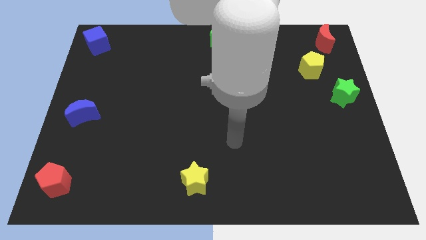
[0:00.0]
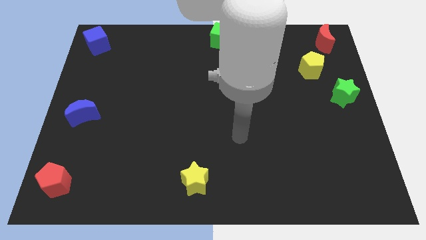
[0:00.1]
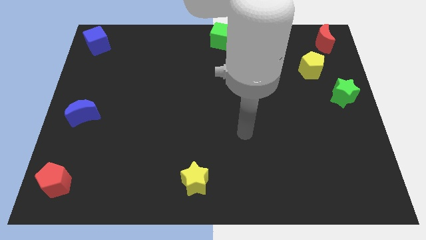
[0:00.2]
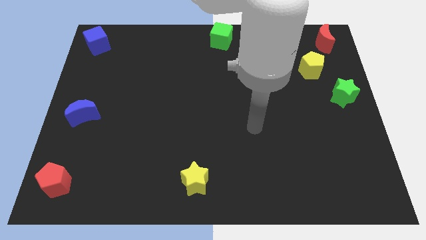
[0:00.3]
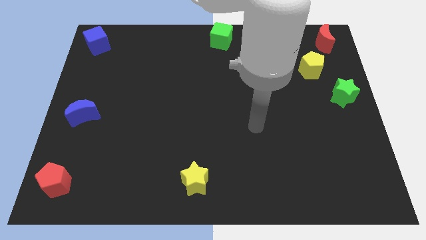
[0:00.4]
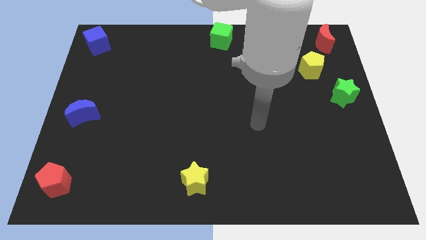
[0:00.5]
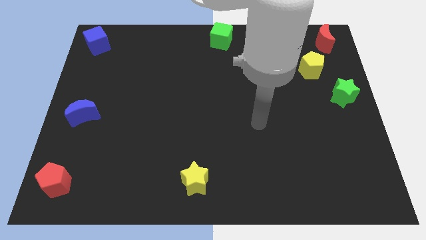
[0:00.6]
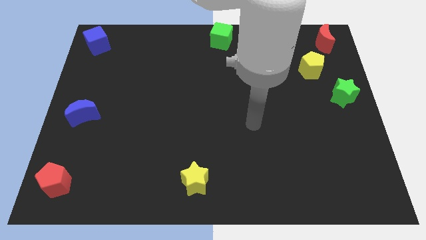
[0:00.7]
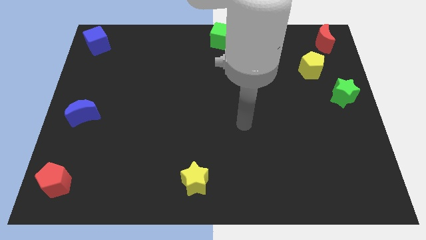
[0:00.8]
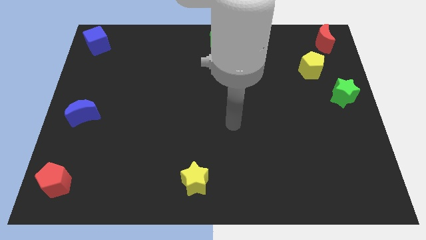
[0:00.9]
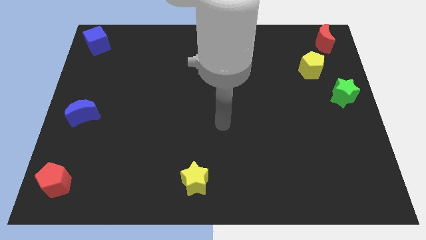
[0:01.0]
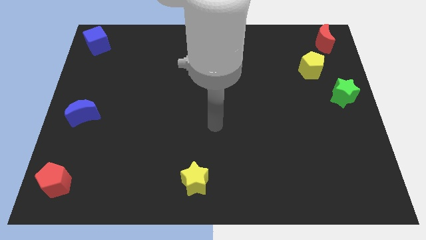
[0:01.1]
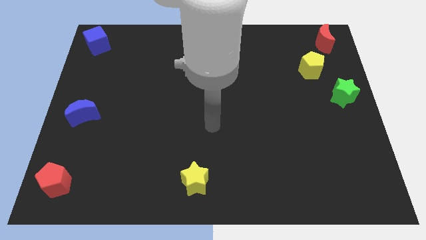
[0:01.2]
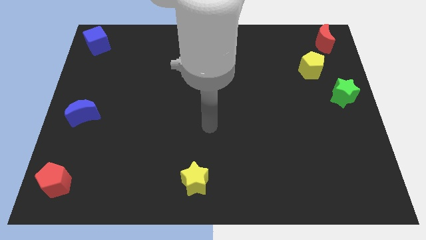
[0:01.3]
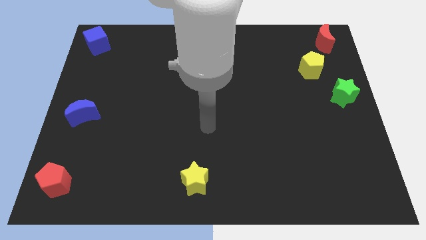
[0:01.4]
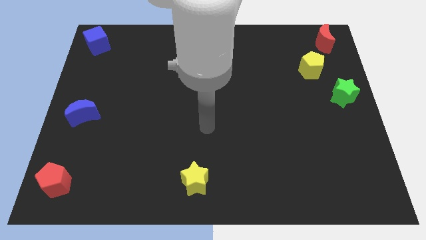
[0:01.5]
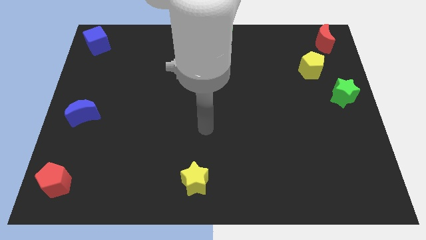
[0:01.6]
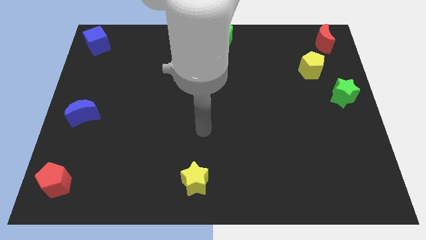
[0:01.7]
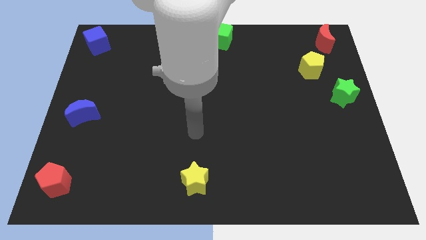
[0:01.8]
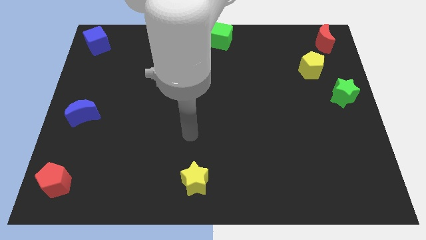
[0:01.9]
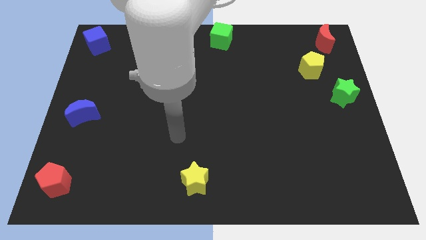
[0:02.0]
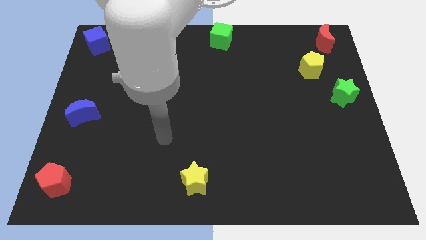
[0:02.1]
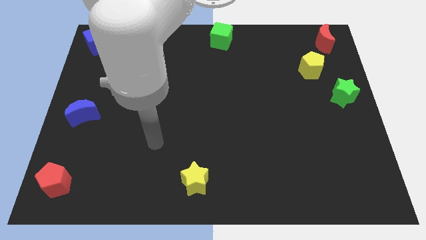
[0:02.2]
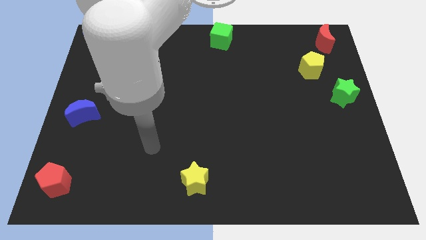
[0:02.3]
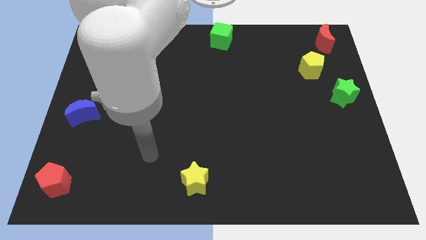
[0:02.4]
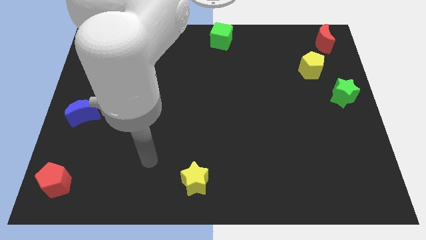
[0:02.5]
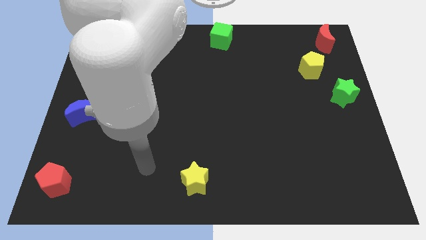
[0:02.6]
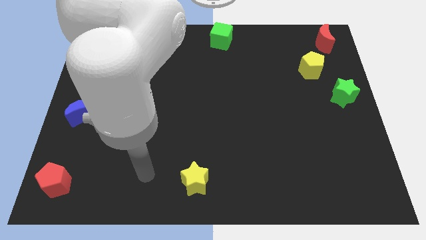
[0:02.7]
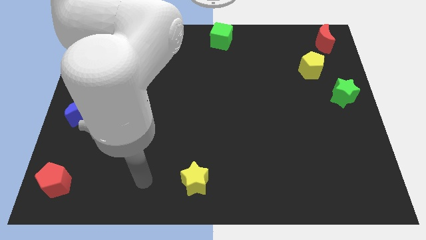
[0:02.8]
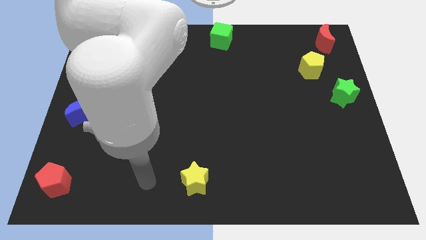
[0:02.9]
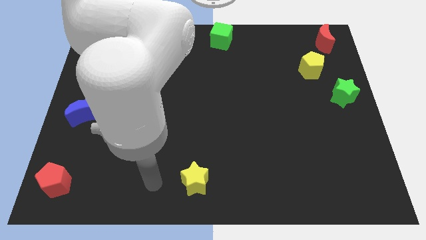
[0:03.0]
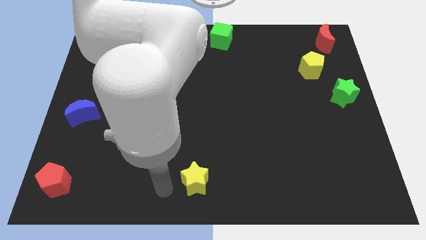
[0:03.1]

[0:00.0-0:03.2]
move your hand to the left of the yellow star

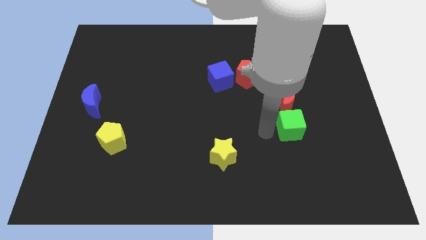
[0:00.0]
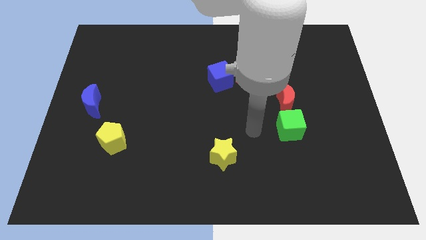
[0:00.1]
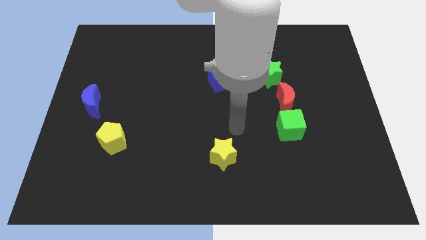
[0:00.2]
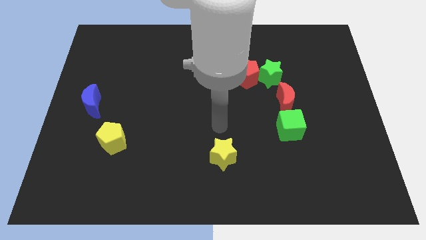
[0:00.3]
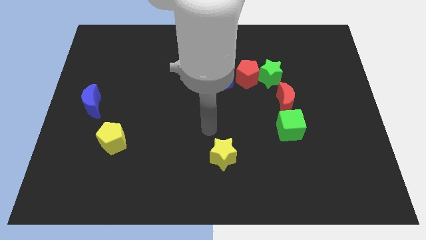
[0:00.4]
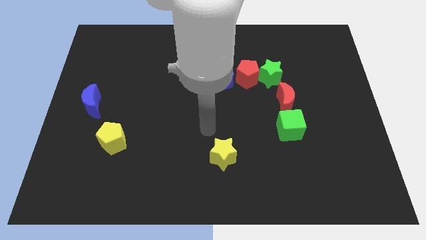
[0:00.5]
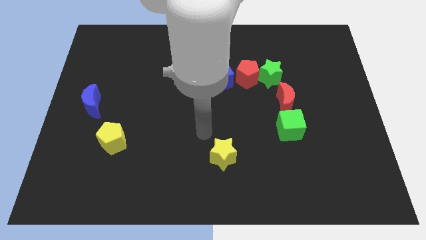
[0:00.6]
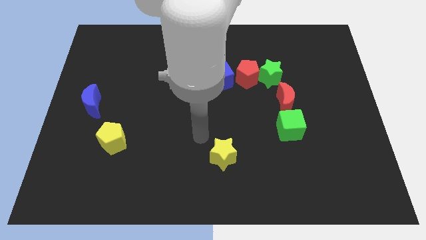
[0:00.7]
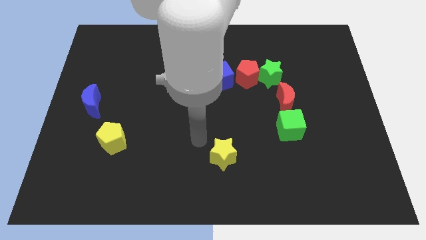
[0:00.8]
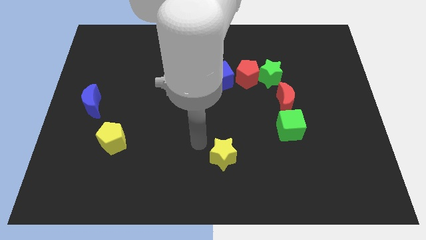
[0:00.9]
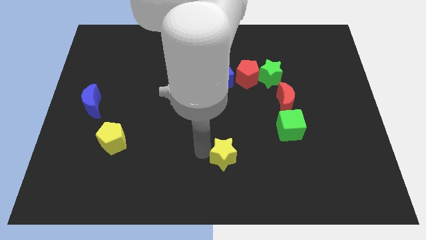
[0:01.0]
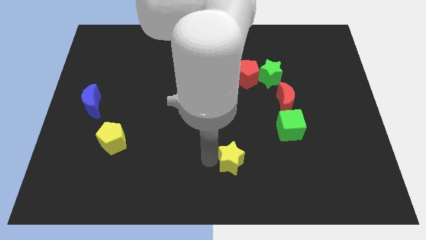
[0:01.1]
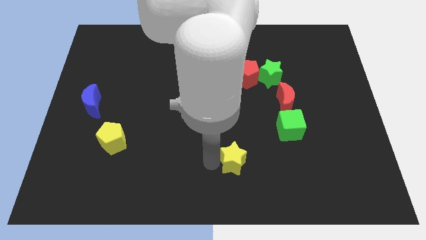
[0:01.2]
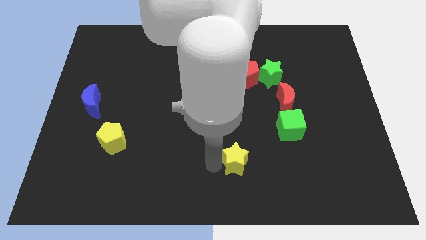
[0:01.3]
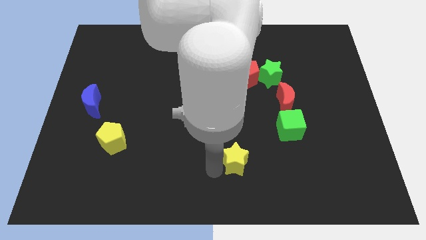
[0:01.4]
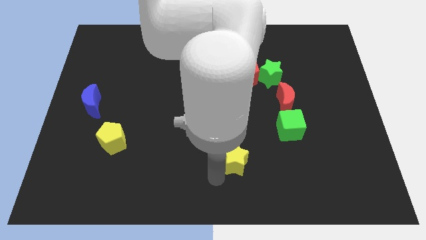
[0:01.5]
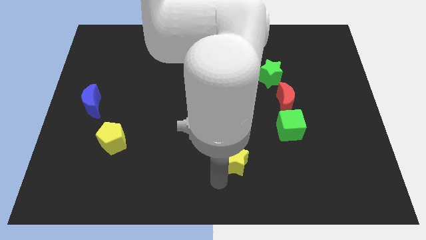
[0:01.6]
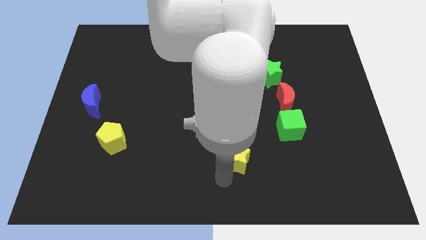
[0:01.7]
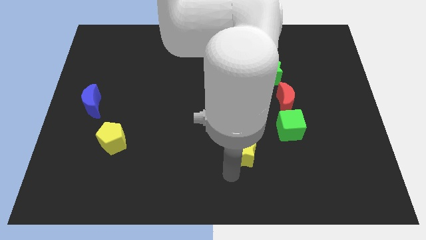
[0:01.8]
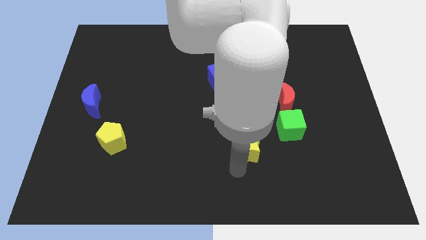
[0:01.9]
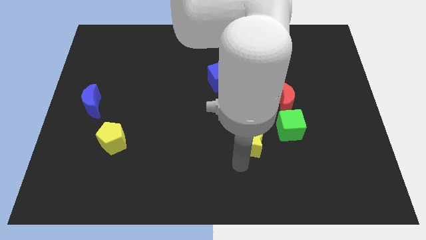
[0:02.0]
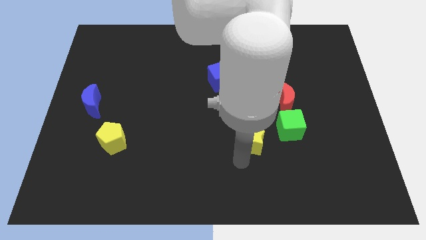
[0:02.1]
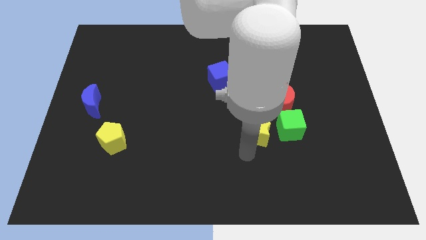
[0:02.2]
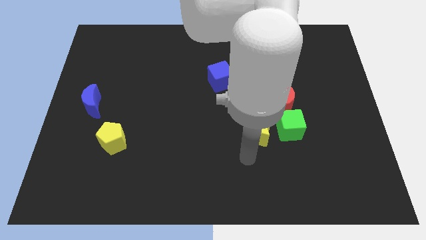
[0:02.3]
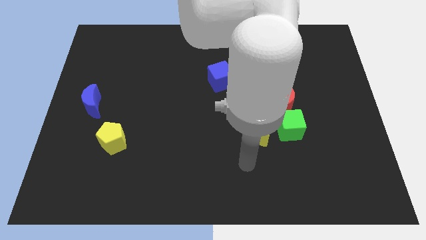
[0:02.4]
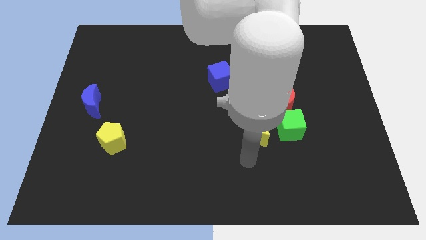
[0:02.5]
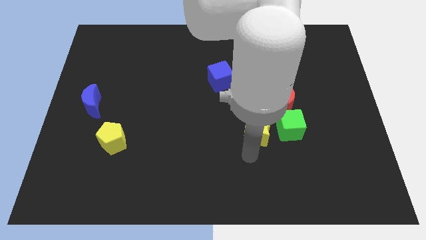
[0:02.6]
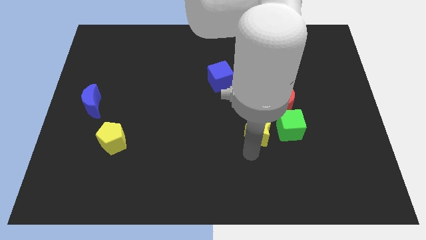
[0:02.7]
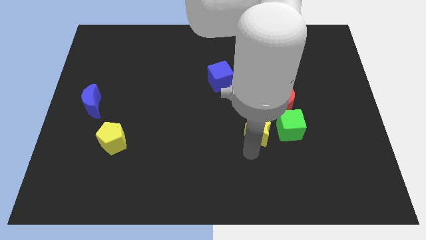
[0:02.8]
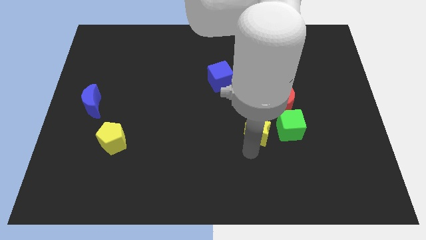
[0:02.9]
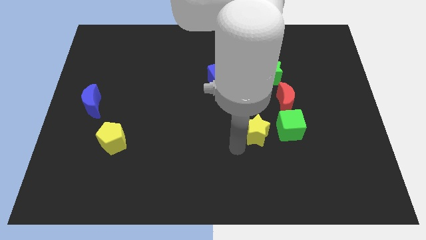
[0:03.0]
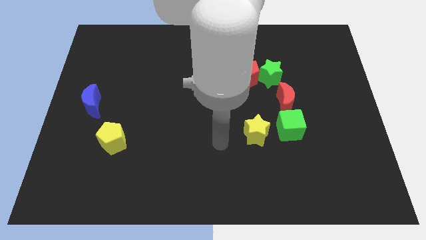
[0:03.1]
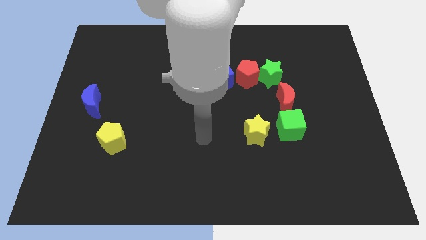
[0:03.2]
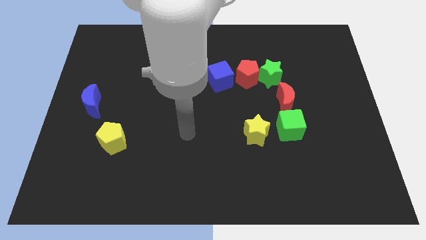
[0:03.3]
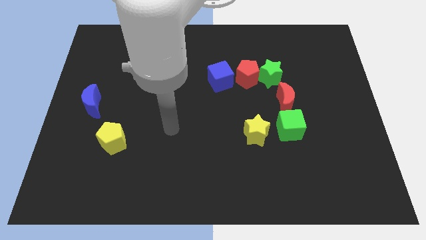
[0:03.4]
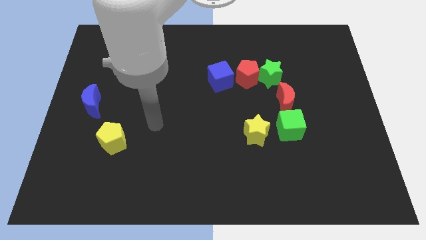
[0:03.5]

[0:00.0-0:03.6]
move the yellow star to the left side of the green cube

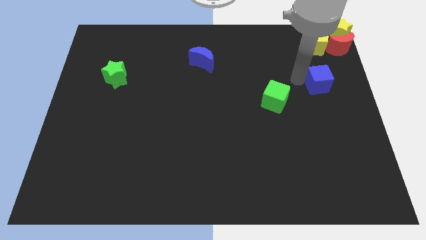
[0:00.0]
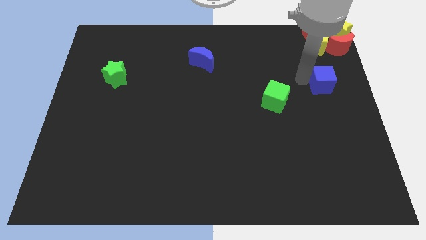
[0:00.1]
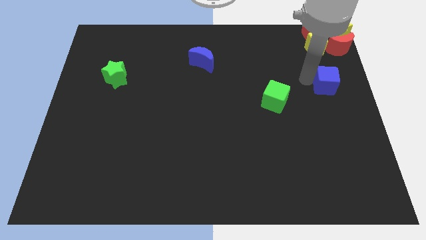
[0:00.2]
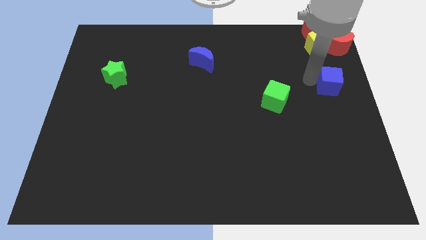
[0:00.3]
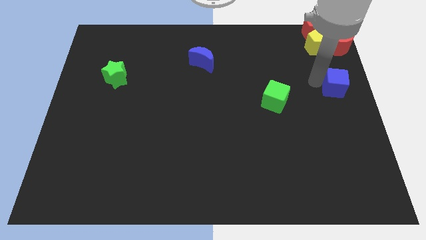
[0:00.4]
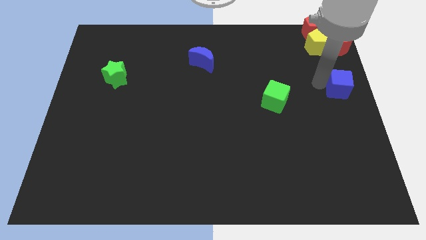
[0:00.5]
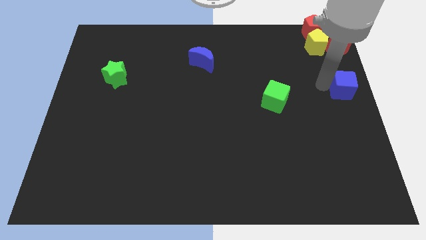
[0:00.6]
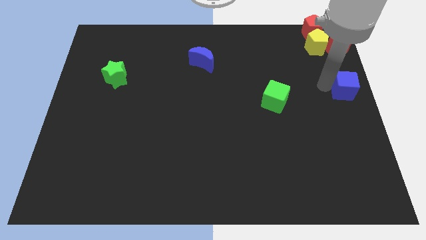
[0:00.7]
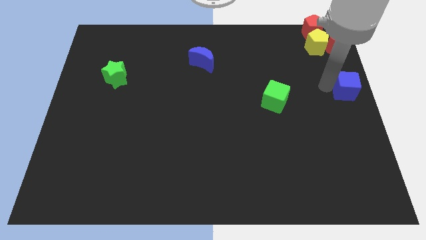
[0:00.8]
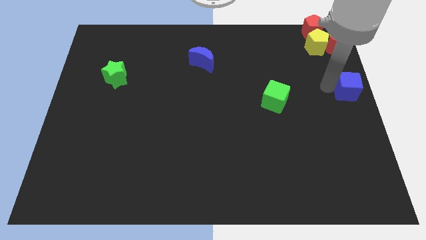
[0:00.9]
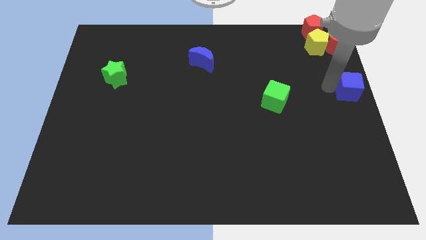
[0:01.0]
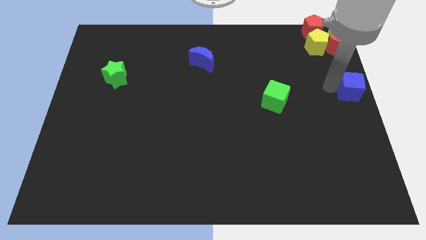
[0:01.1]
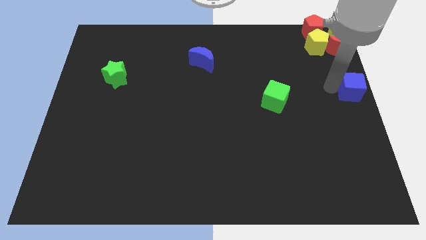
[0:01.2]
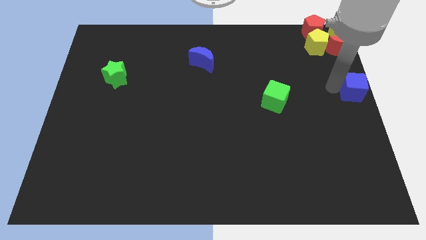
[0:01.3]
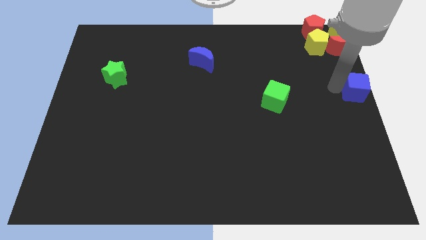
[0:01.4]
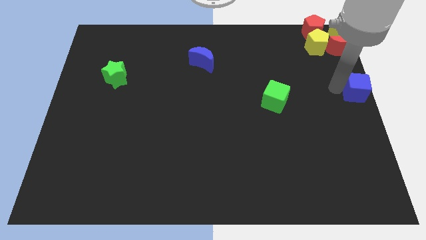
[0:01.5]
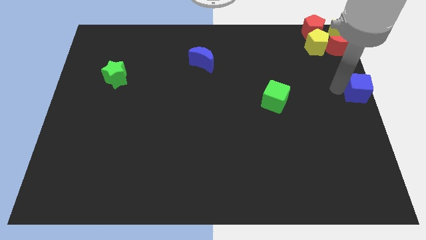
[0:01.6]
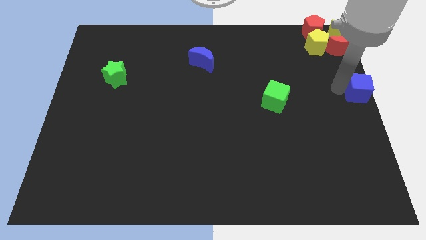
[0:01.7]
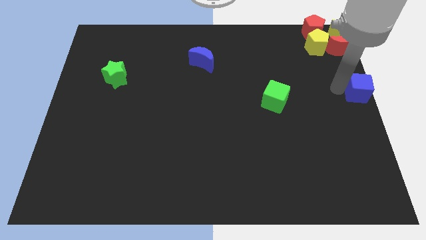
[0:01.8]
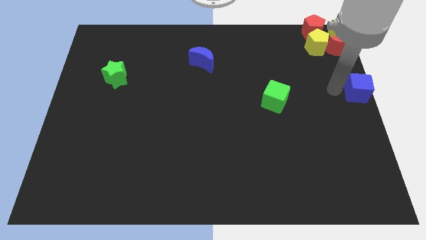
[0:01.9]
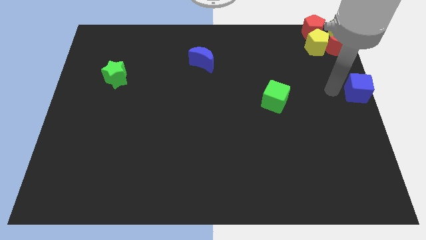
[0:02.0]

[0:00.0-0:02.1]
place blue cube at the center right

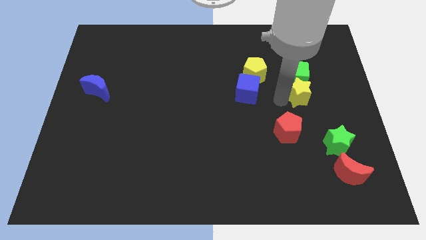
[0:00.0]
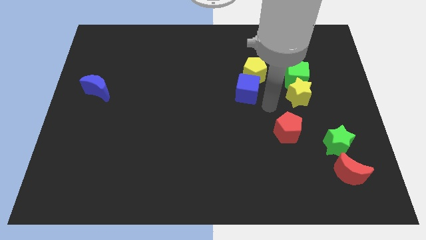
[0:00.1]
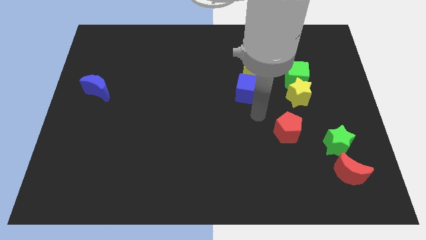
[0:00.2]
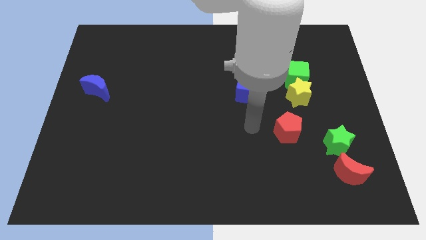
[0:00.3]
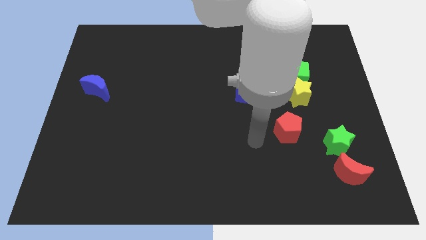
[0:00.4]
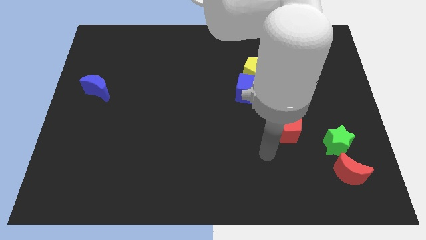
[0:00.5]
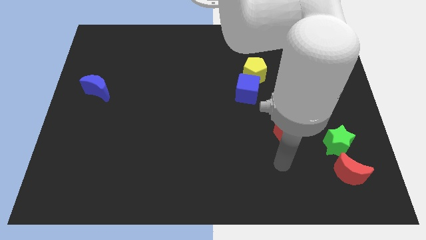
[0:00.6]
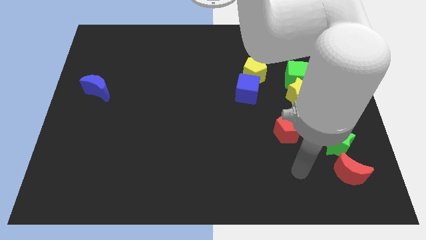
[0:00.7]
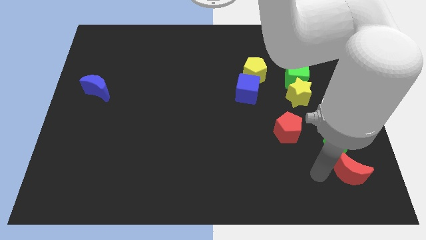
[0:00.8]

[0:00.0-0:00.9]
move your arm to the left of red moon
